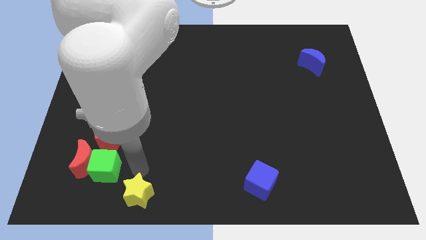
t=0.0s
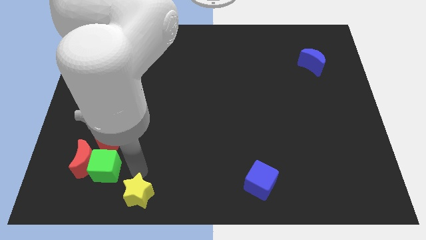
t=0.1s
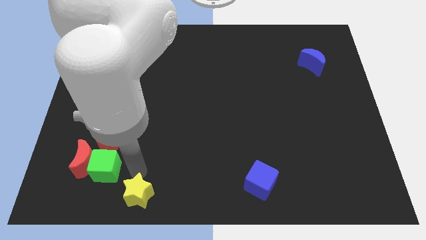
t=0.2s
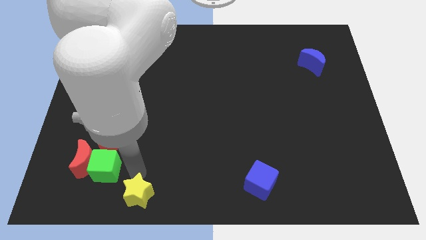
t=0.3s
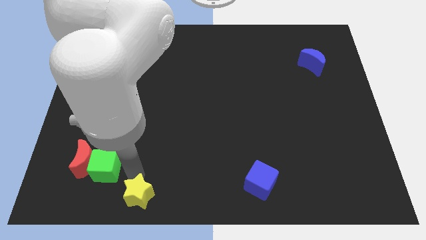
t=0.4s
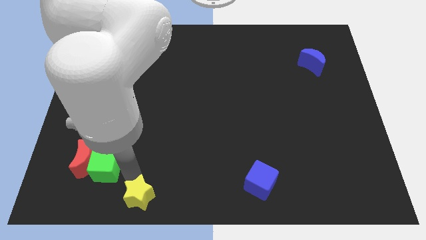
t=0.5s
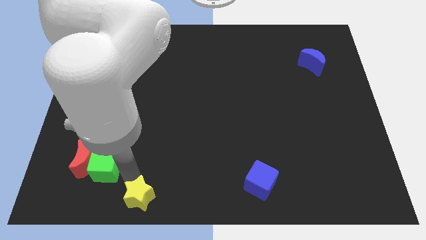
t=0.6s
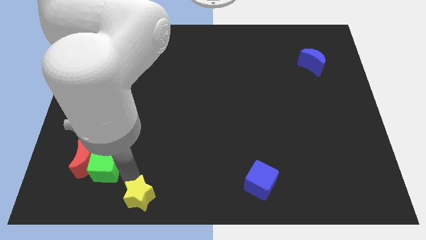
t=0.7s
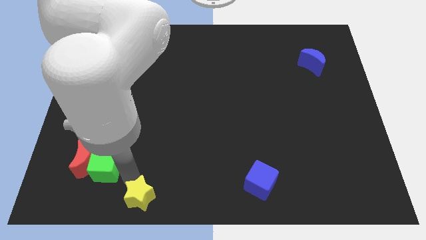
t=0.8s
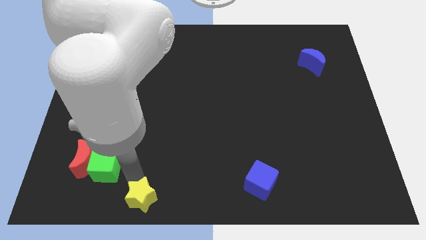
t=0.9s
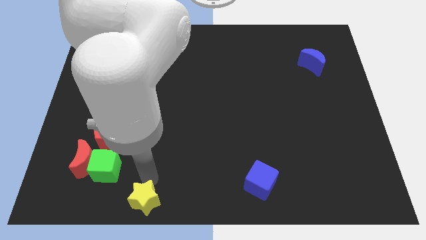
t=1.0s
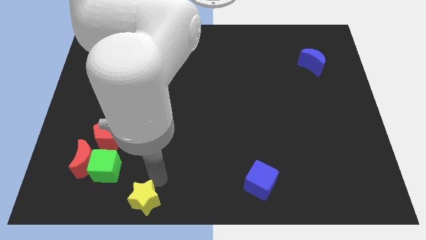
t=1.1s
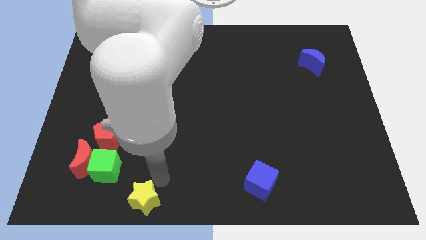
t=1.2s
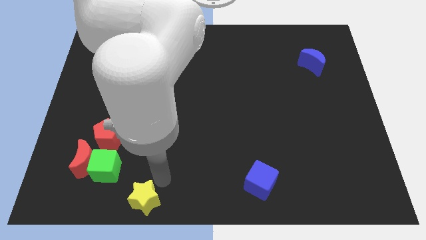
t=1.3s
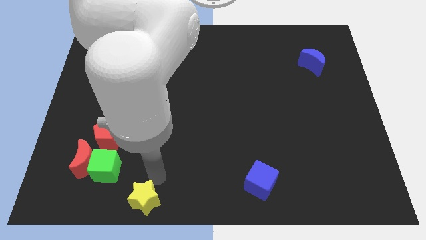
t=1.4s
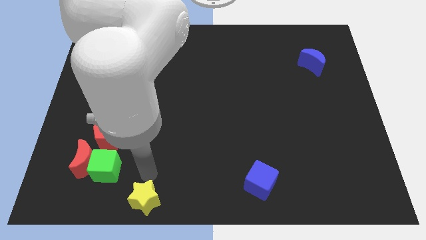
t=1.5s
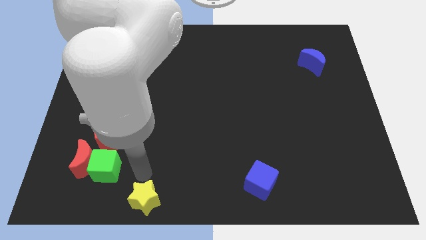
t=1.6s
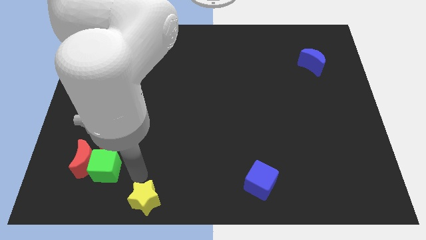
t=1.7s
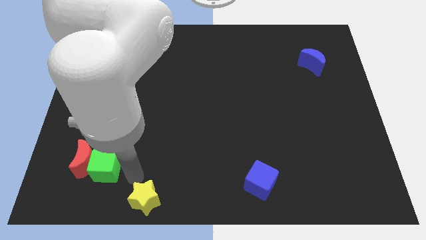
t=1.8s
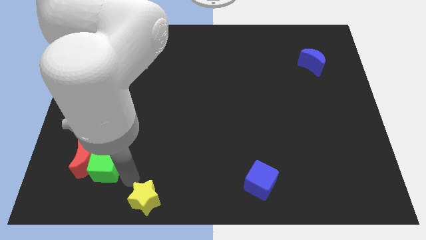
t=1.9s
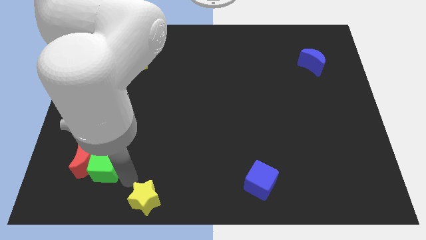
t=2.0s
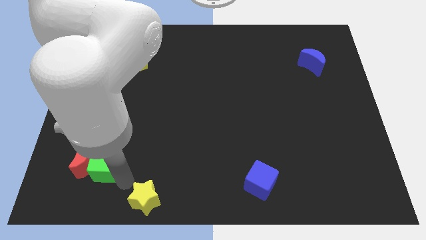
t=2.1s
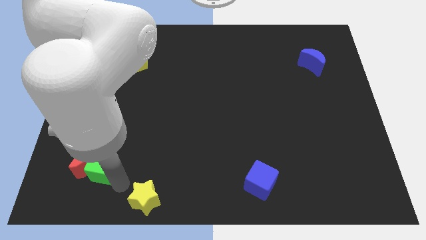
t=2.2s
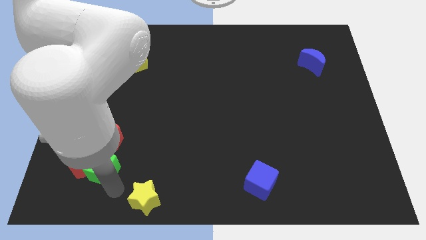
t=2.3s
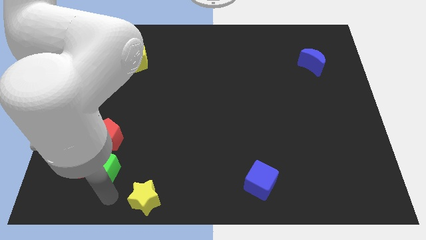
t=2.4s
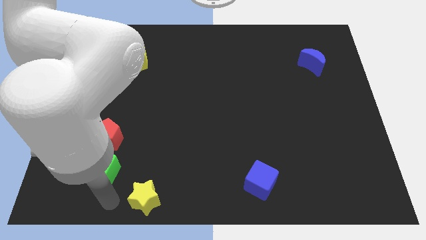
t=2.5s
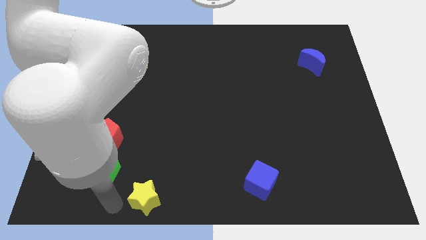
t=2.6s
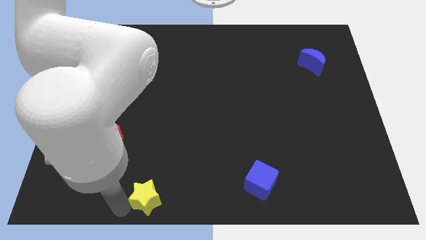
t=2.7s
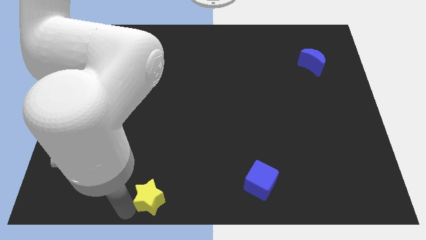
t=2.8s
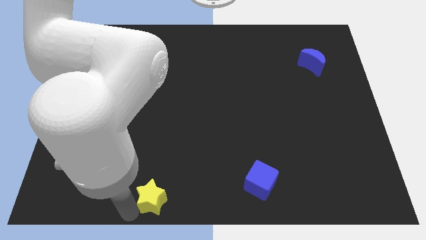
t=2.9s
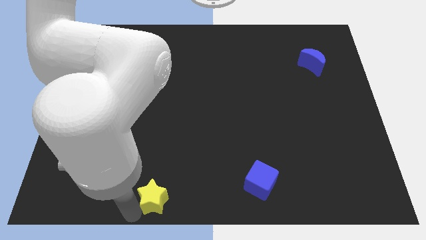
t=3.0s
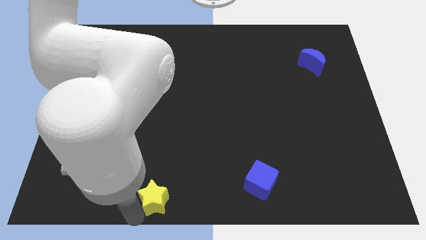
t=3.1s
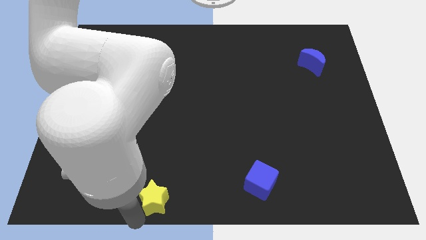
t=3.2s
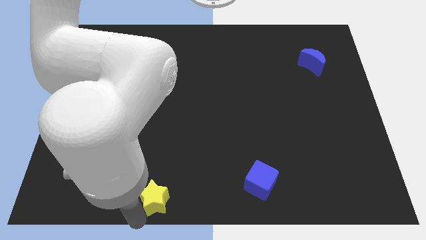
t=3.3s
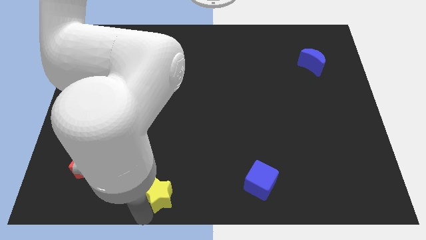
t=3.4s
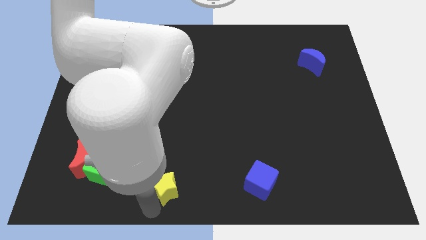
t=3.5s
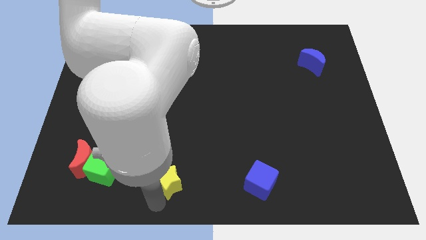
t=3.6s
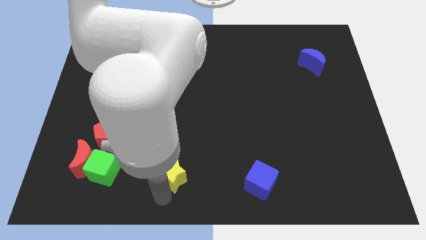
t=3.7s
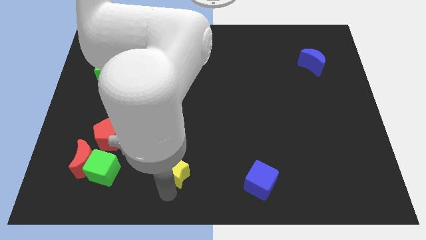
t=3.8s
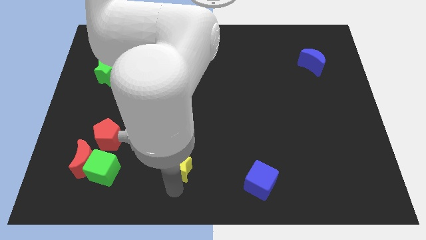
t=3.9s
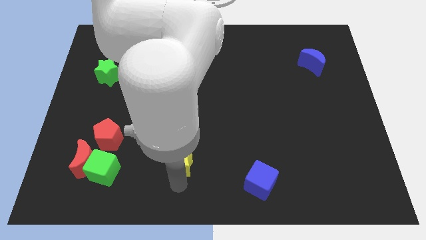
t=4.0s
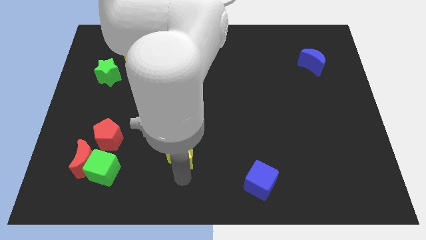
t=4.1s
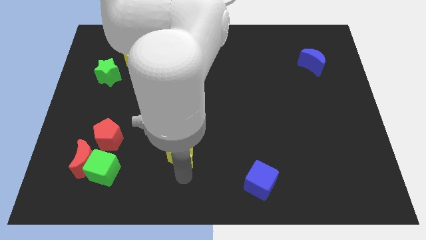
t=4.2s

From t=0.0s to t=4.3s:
push the yellow star upwards

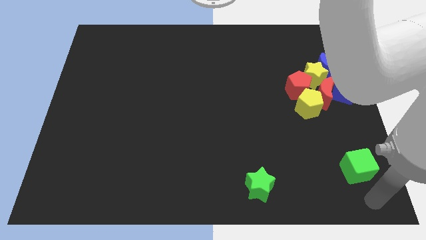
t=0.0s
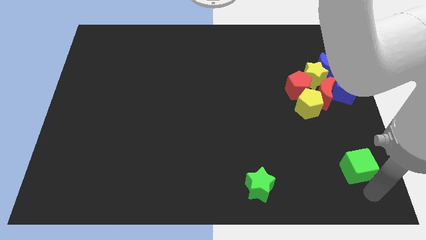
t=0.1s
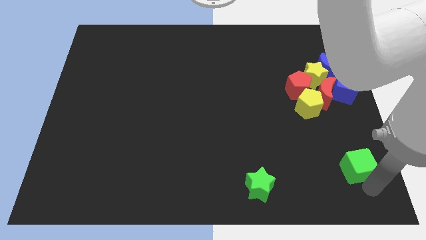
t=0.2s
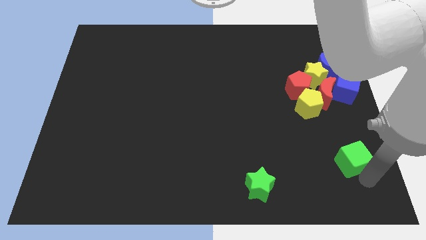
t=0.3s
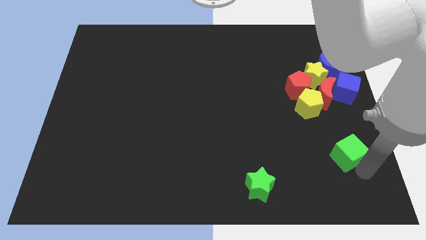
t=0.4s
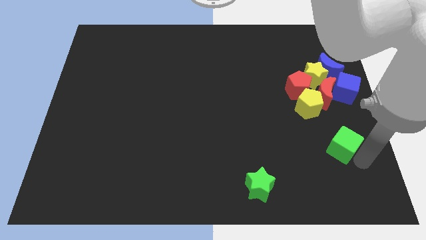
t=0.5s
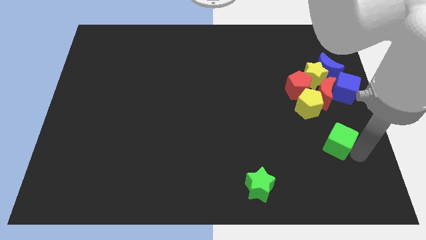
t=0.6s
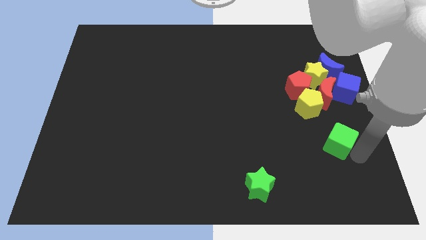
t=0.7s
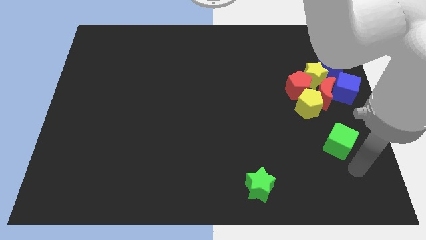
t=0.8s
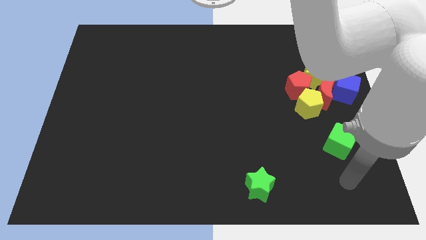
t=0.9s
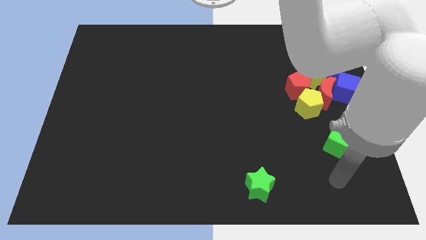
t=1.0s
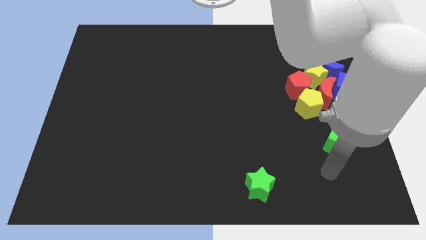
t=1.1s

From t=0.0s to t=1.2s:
push green cube slightly to the top

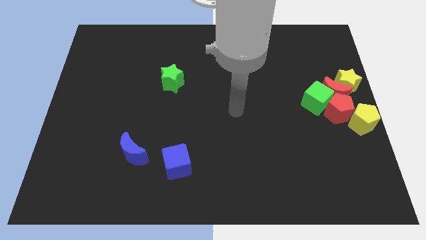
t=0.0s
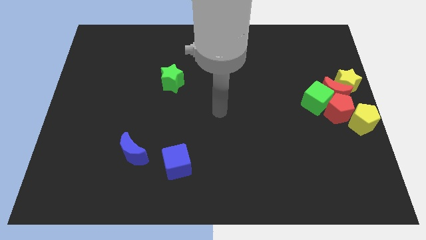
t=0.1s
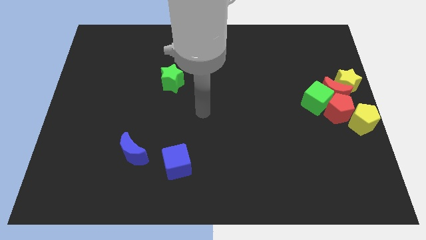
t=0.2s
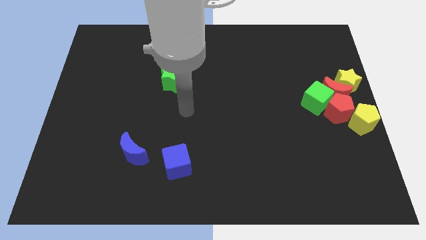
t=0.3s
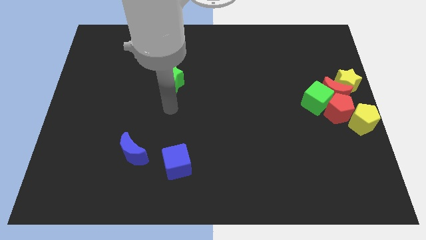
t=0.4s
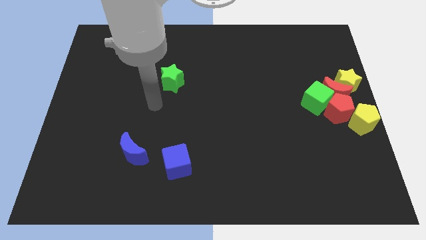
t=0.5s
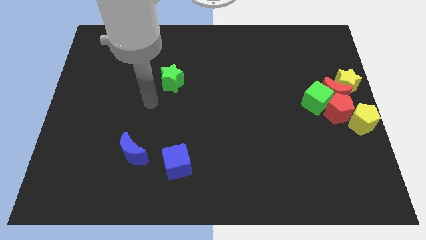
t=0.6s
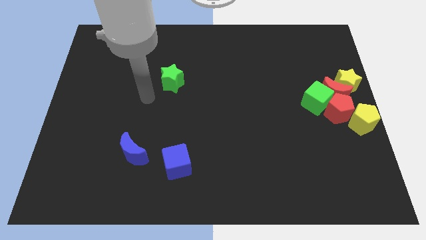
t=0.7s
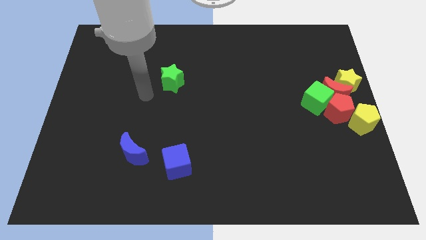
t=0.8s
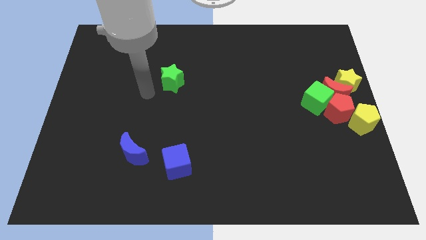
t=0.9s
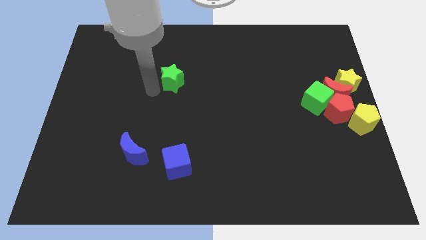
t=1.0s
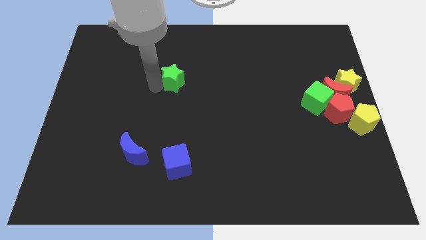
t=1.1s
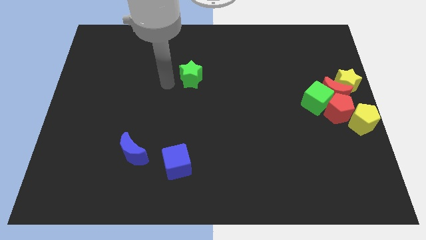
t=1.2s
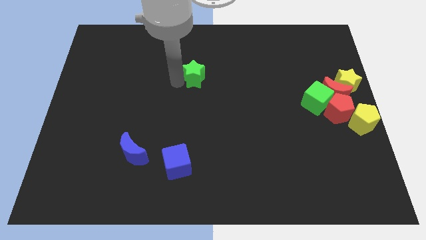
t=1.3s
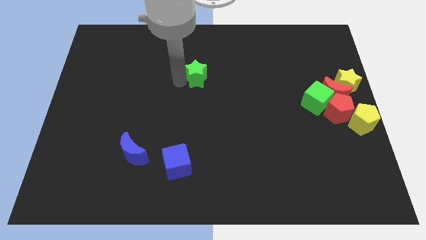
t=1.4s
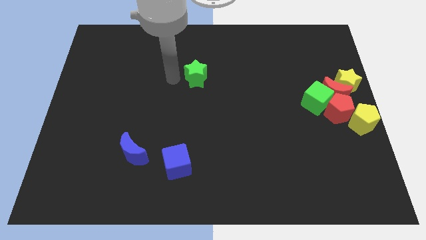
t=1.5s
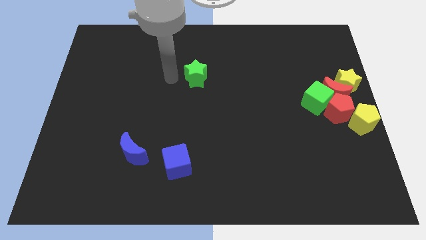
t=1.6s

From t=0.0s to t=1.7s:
slightly push green star towards the right

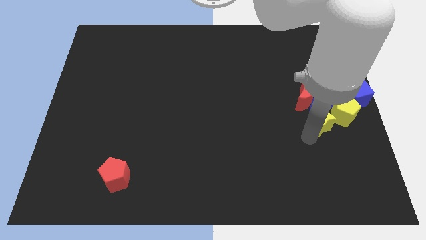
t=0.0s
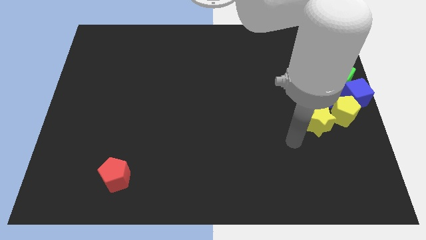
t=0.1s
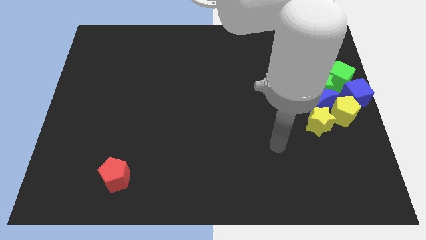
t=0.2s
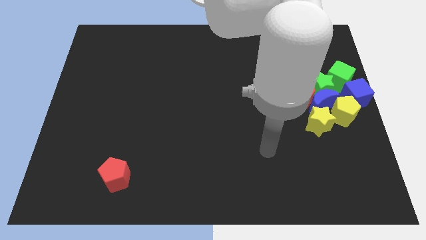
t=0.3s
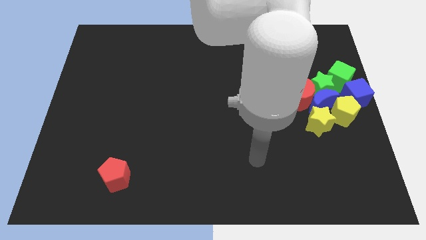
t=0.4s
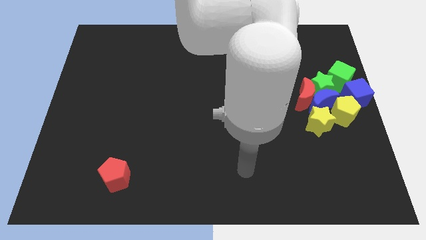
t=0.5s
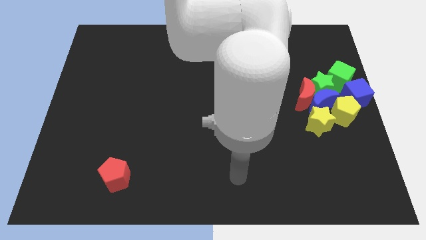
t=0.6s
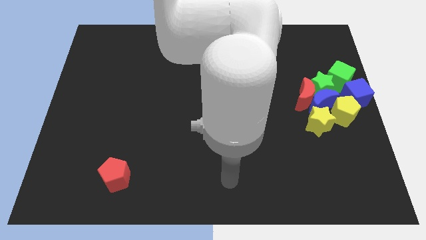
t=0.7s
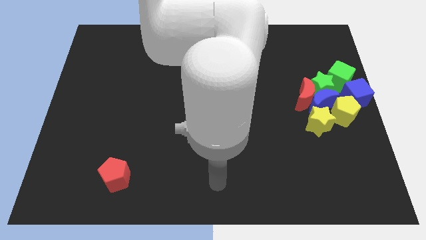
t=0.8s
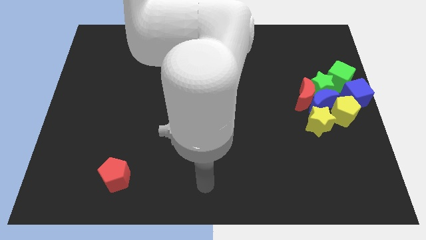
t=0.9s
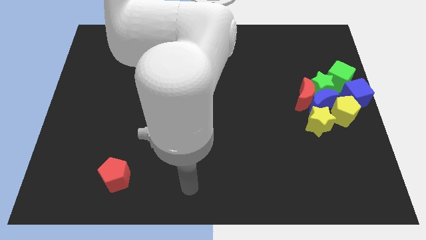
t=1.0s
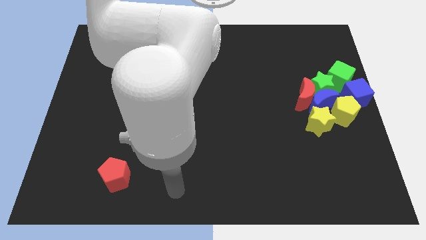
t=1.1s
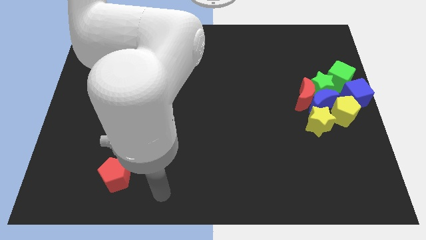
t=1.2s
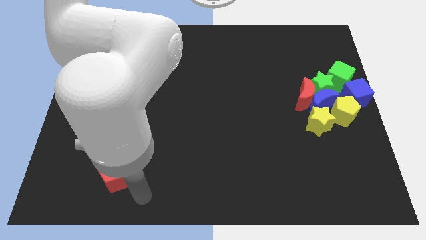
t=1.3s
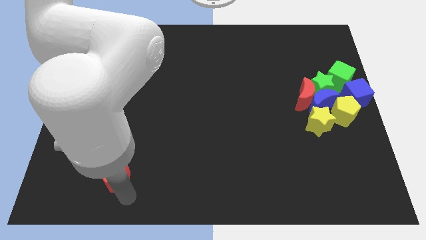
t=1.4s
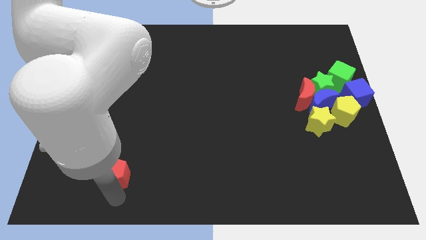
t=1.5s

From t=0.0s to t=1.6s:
point your arm at the bottom of the red pentagon
